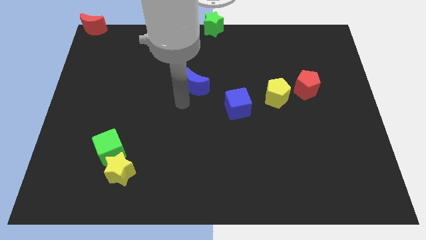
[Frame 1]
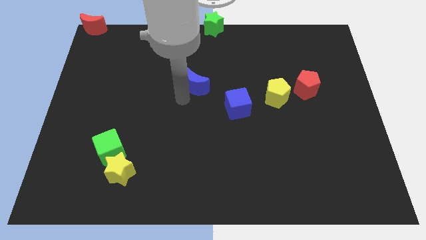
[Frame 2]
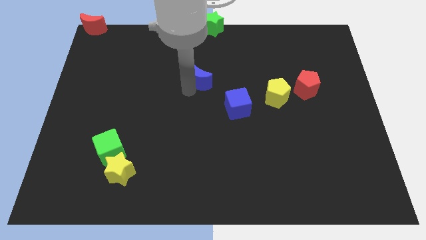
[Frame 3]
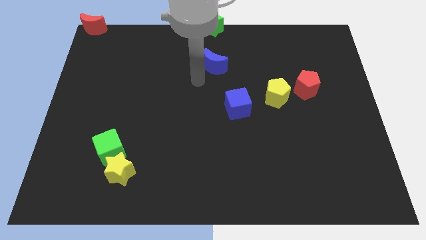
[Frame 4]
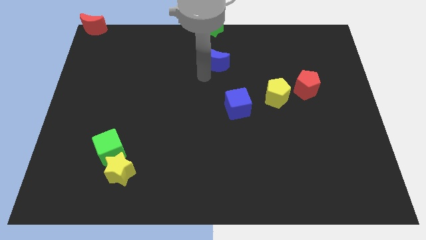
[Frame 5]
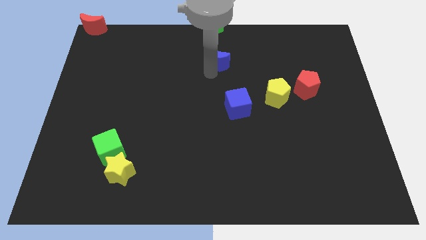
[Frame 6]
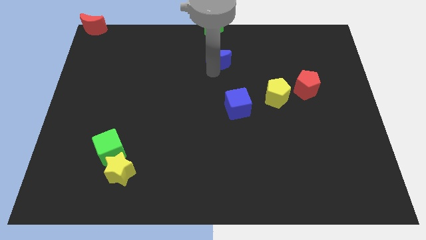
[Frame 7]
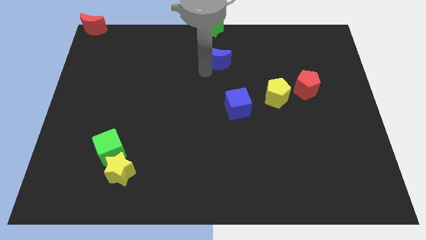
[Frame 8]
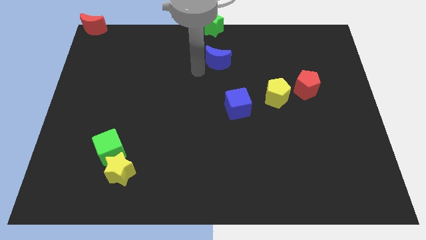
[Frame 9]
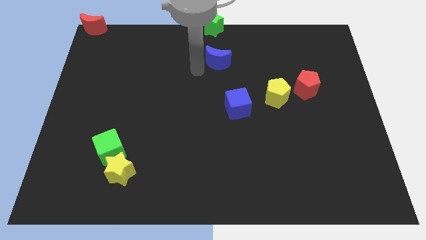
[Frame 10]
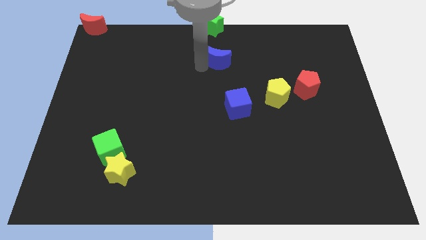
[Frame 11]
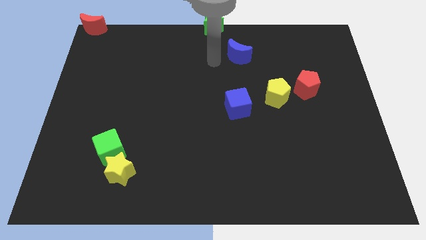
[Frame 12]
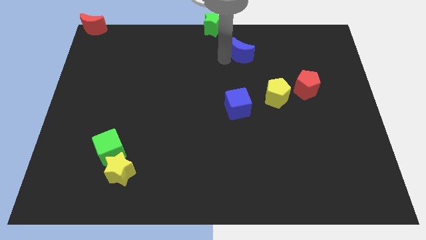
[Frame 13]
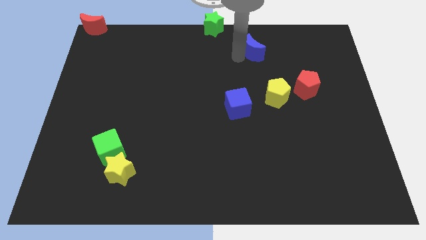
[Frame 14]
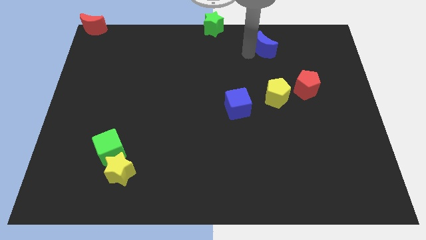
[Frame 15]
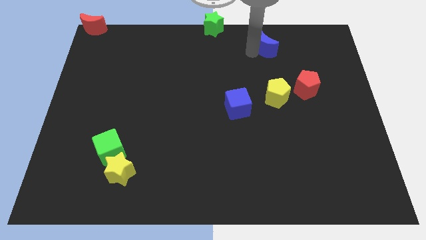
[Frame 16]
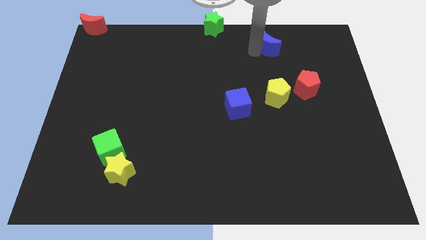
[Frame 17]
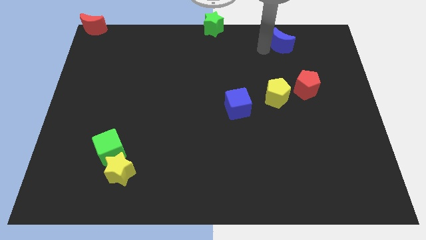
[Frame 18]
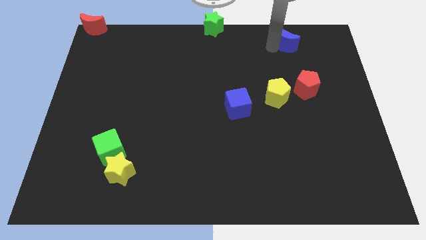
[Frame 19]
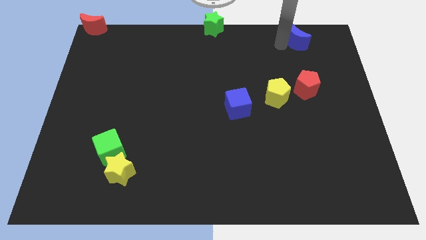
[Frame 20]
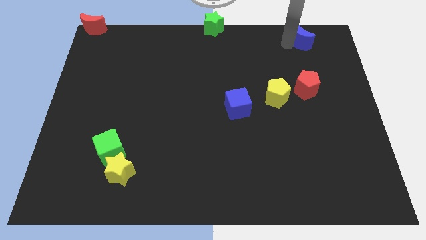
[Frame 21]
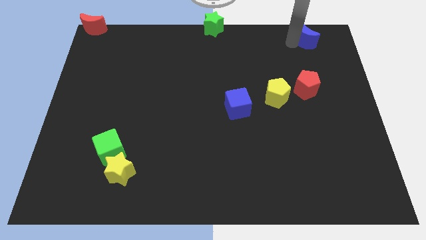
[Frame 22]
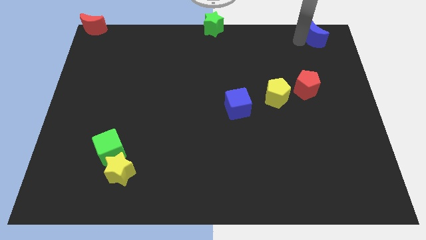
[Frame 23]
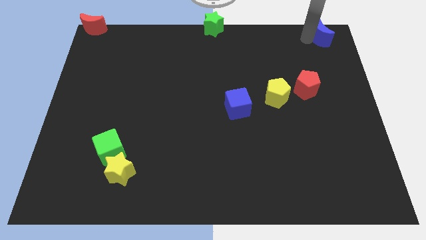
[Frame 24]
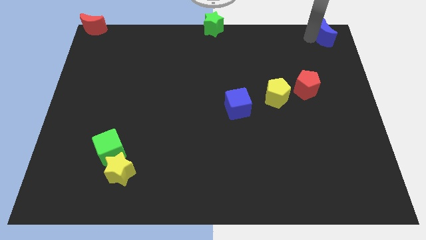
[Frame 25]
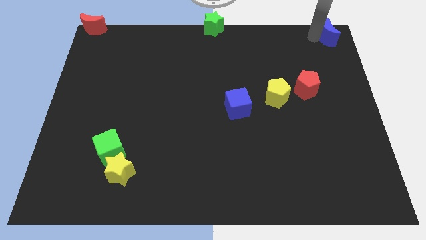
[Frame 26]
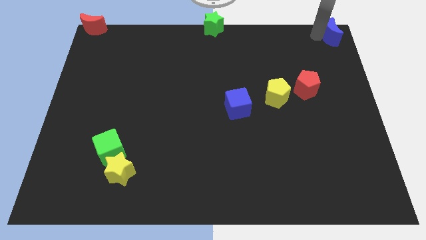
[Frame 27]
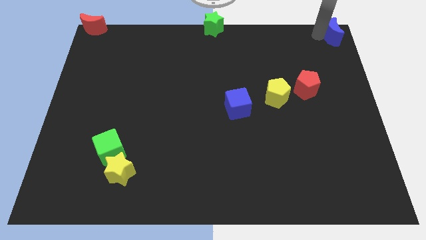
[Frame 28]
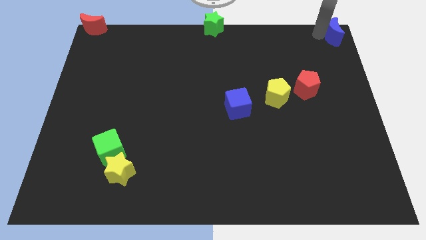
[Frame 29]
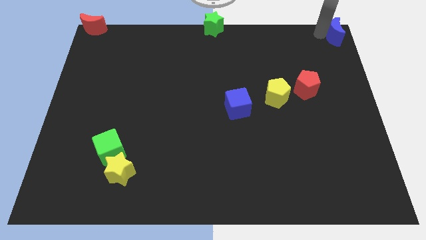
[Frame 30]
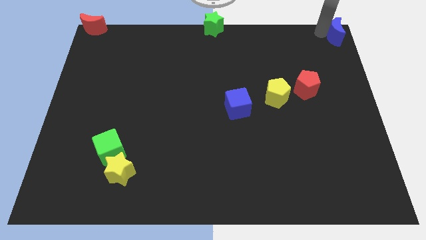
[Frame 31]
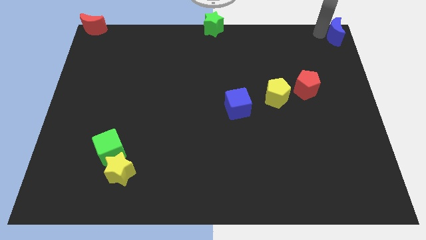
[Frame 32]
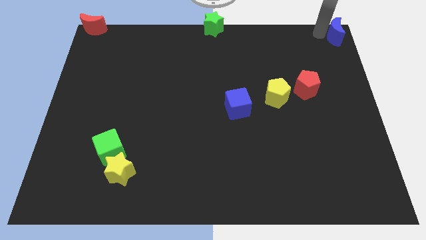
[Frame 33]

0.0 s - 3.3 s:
place blue crescent towards top right corner

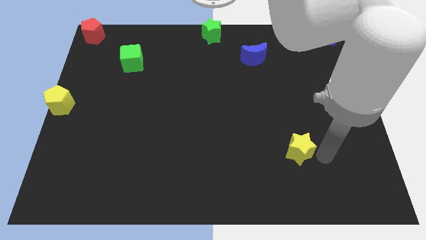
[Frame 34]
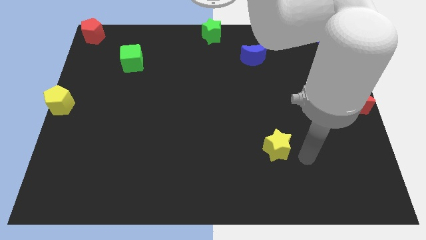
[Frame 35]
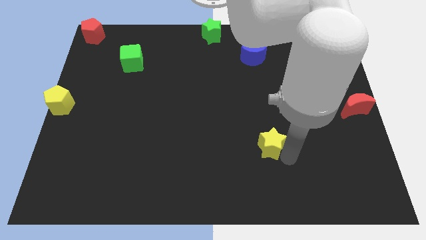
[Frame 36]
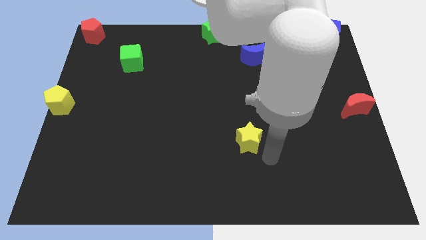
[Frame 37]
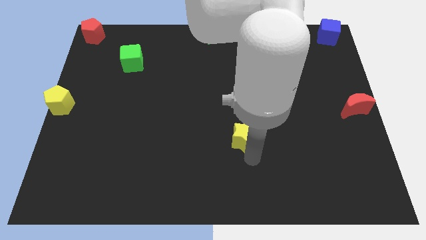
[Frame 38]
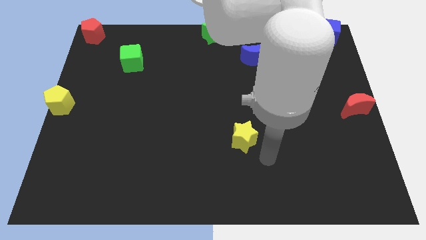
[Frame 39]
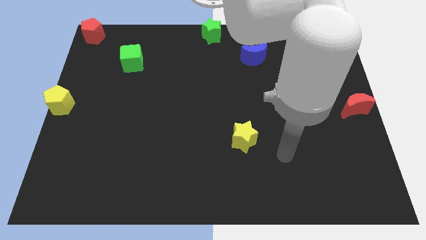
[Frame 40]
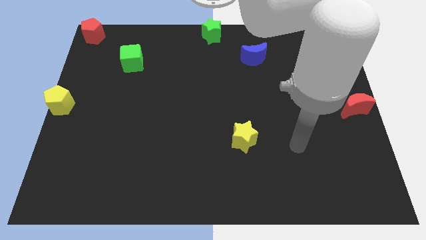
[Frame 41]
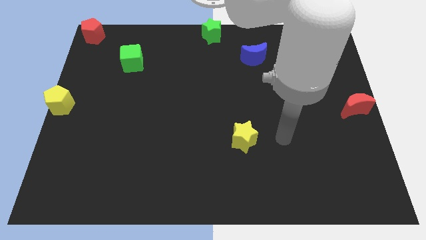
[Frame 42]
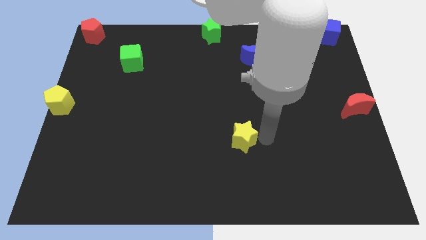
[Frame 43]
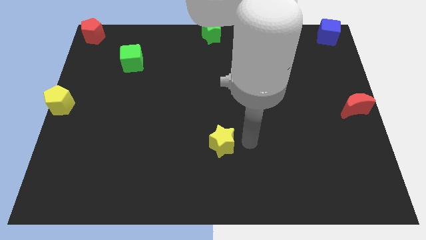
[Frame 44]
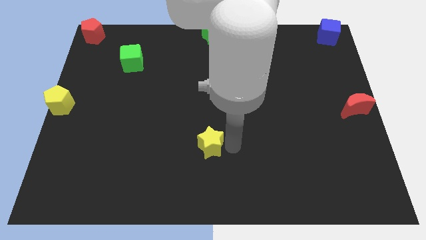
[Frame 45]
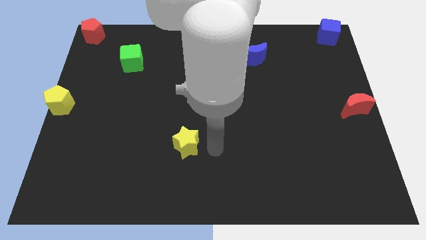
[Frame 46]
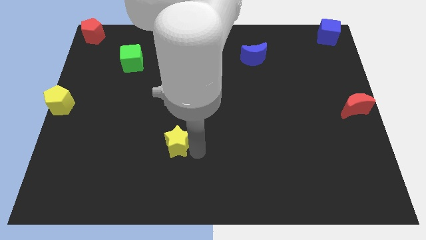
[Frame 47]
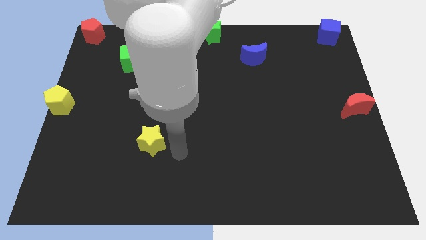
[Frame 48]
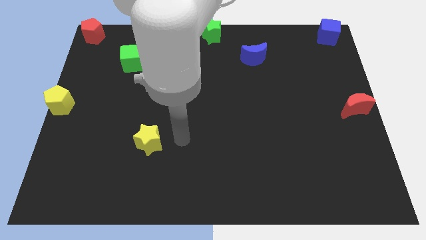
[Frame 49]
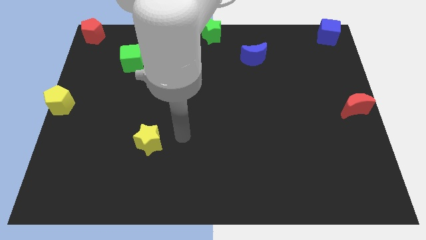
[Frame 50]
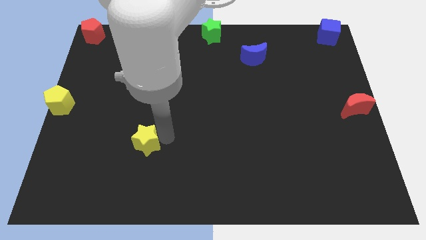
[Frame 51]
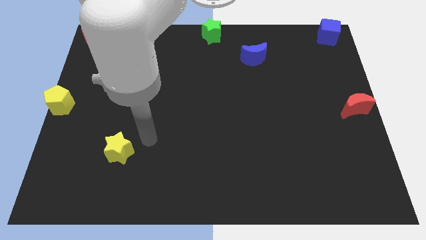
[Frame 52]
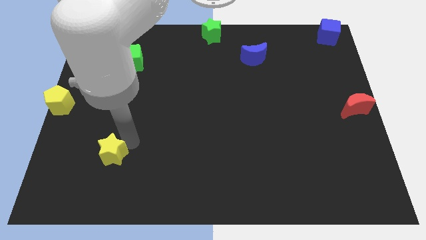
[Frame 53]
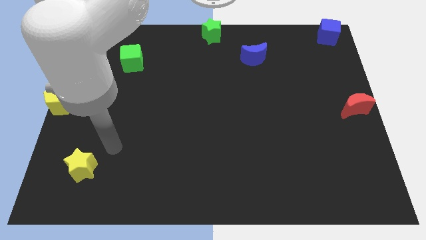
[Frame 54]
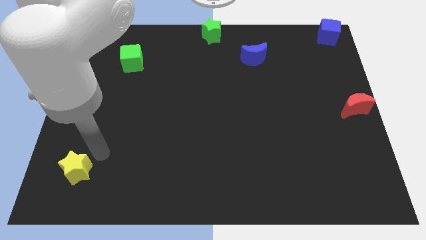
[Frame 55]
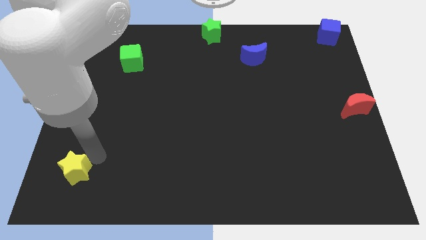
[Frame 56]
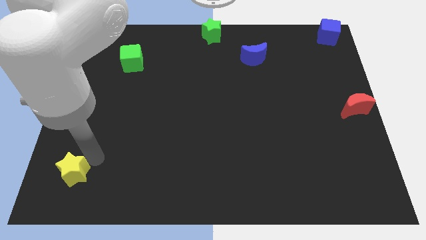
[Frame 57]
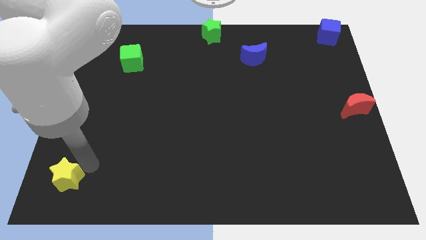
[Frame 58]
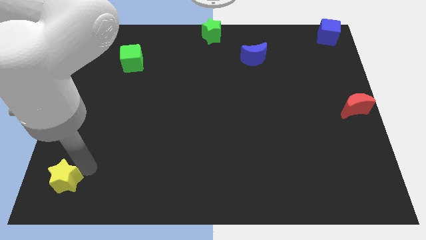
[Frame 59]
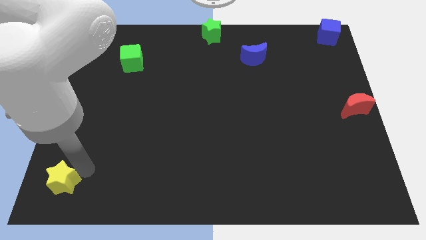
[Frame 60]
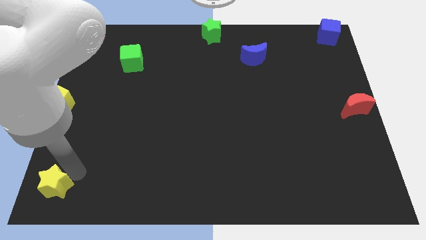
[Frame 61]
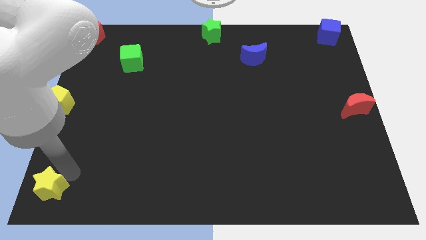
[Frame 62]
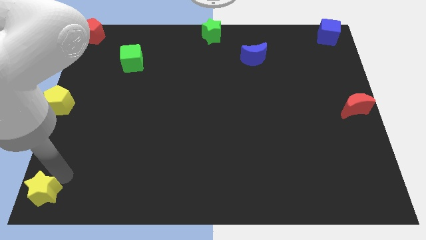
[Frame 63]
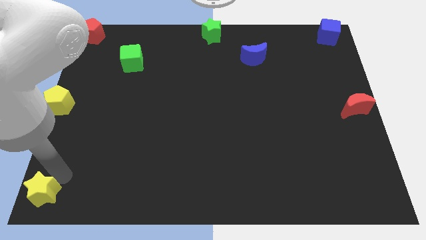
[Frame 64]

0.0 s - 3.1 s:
place the yellow star to the bottom left of the board

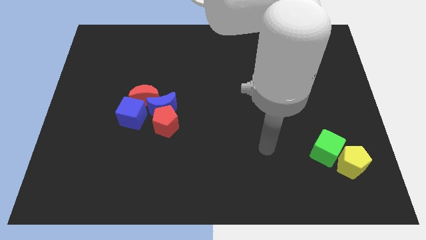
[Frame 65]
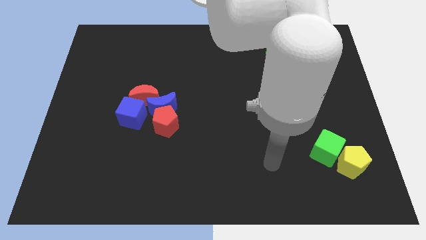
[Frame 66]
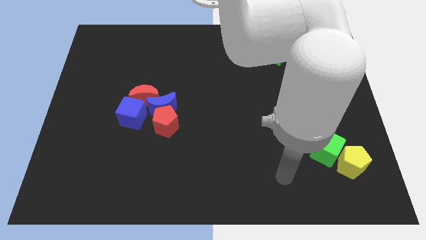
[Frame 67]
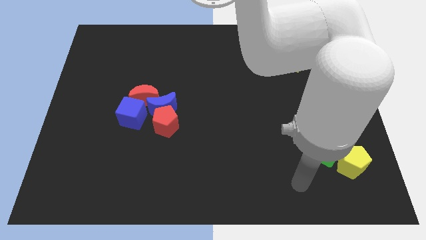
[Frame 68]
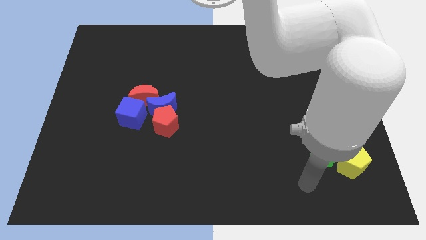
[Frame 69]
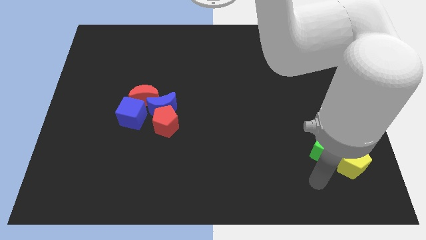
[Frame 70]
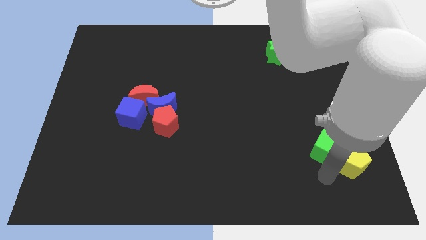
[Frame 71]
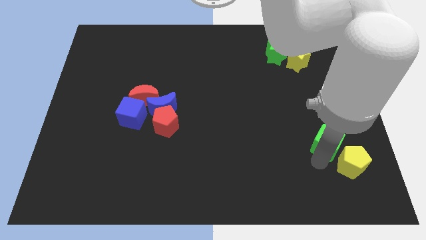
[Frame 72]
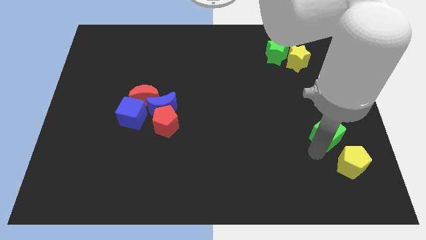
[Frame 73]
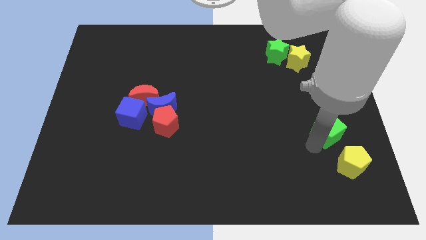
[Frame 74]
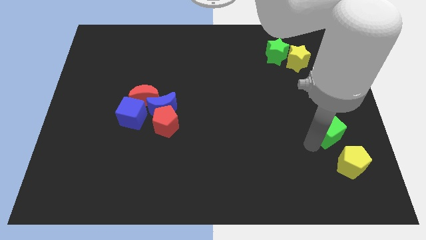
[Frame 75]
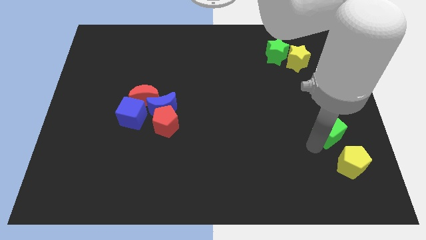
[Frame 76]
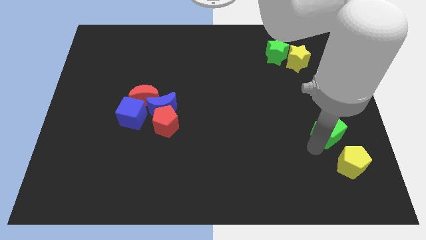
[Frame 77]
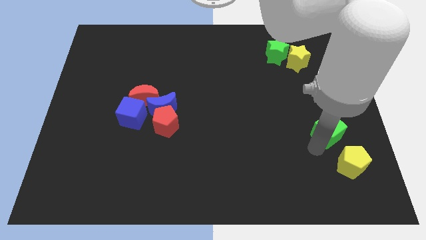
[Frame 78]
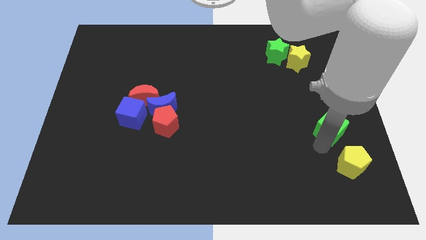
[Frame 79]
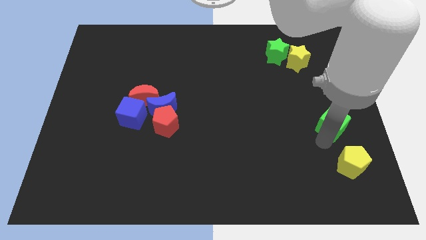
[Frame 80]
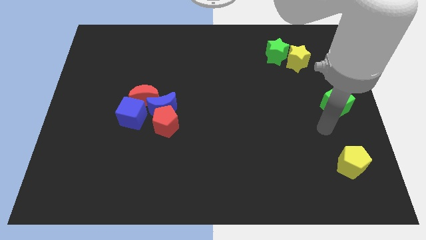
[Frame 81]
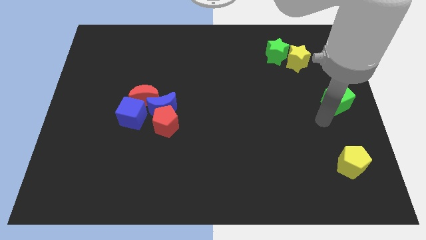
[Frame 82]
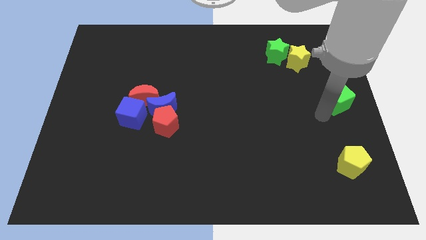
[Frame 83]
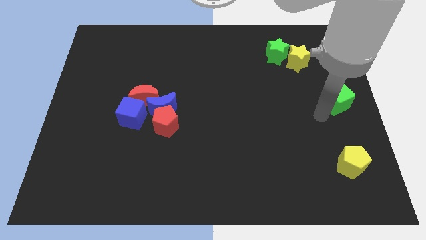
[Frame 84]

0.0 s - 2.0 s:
separate green cube from yellow pentagon

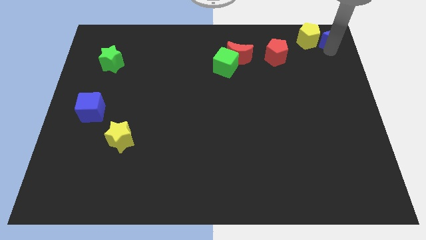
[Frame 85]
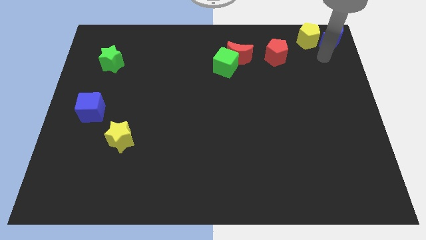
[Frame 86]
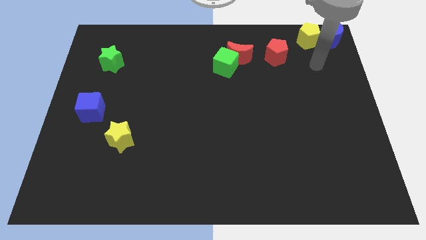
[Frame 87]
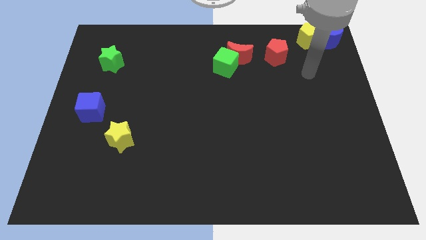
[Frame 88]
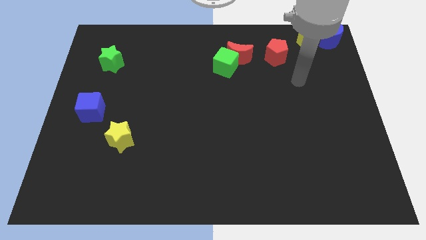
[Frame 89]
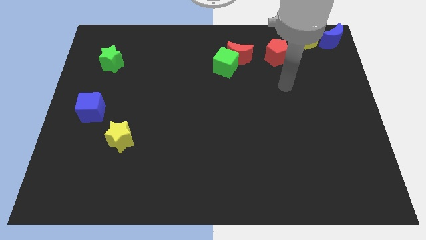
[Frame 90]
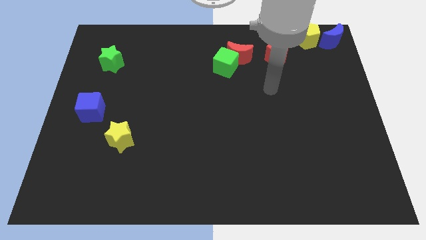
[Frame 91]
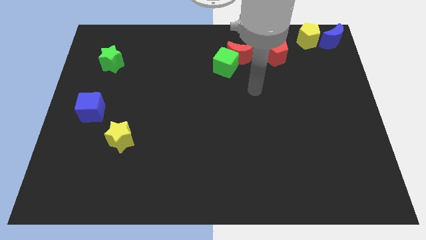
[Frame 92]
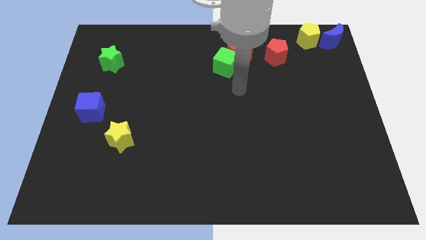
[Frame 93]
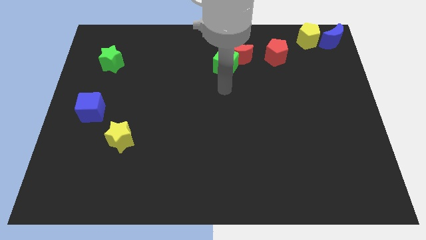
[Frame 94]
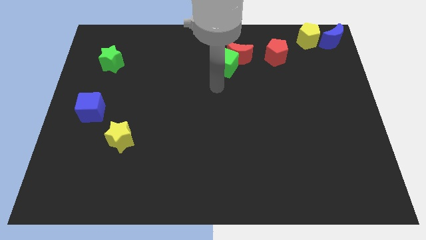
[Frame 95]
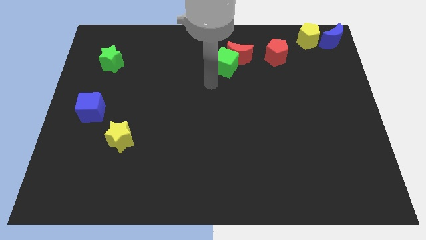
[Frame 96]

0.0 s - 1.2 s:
move your arm away from the blue crescent
